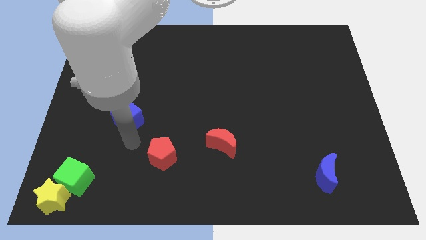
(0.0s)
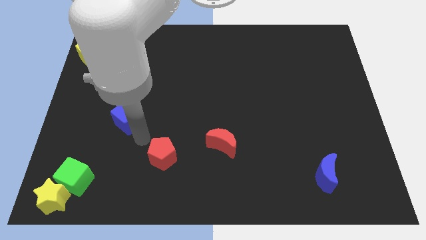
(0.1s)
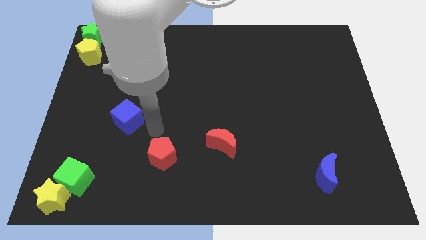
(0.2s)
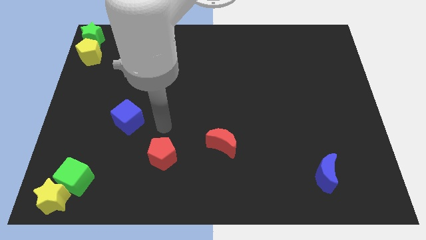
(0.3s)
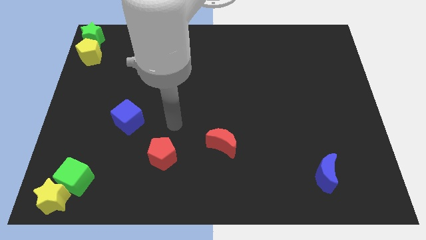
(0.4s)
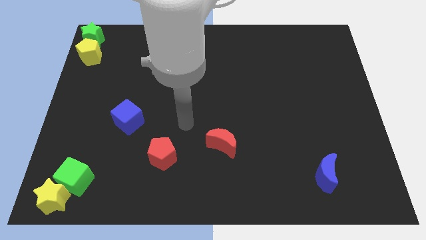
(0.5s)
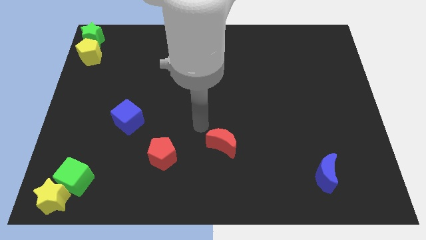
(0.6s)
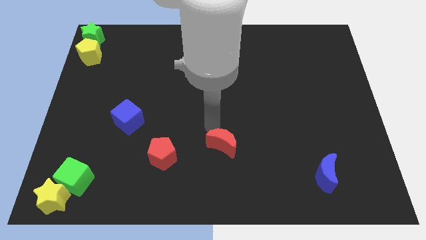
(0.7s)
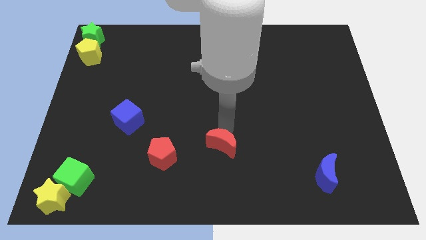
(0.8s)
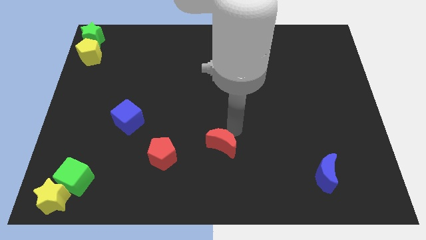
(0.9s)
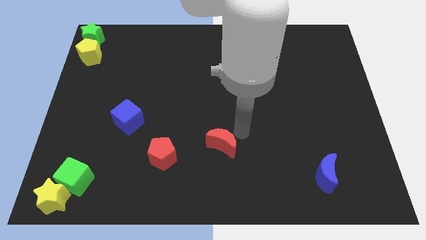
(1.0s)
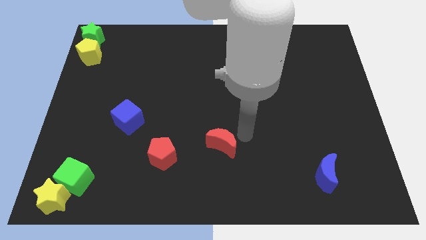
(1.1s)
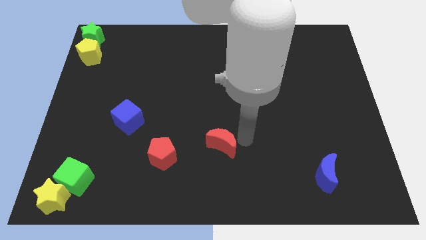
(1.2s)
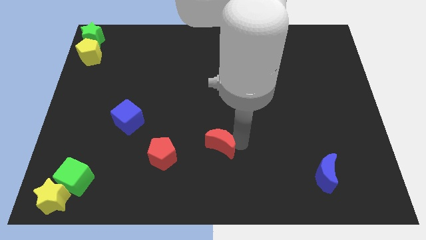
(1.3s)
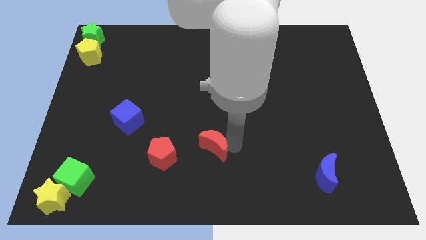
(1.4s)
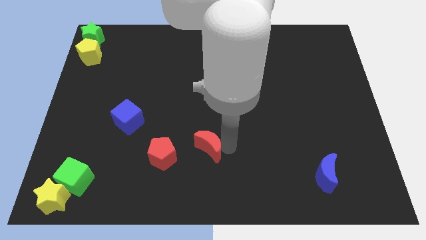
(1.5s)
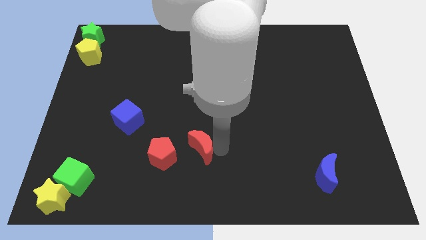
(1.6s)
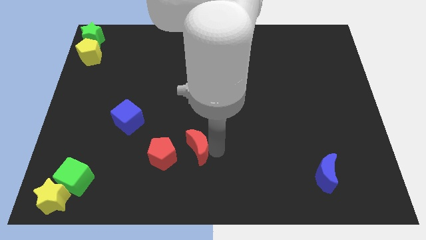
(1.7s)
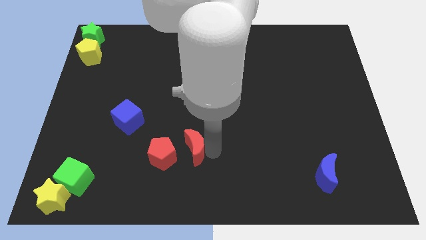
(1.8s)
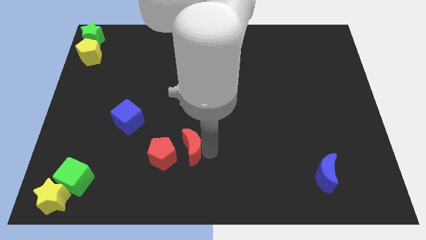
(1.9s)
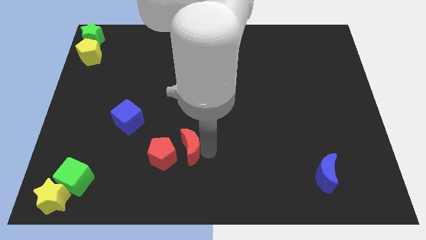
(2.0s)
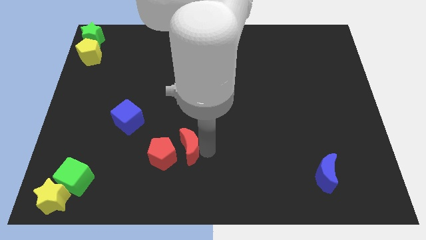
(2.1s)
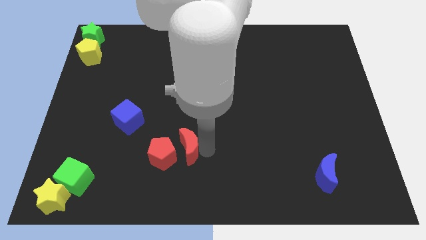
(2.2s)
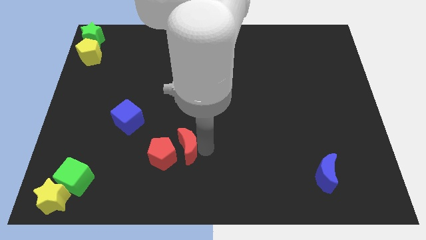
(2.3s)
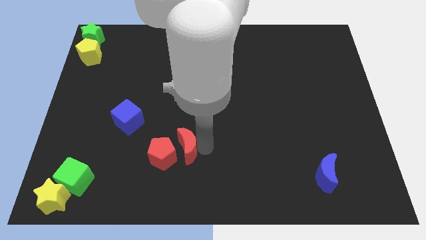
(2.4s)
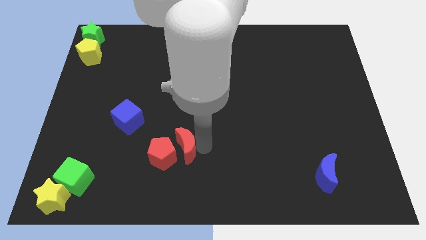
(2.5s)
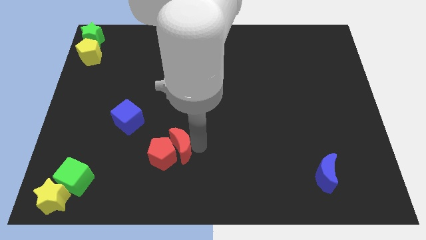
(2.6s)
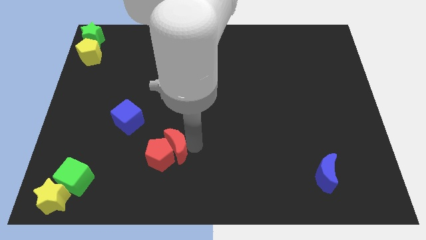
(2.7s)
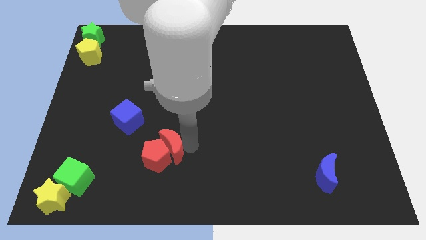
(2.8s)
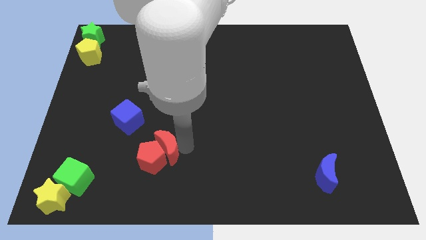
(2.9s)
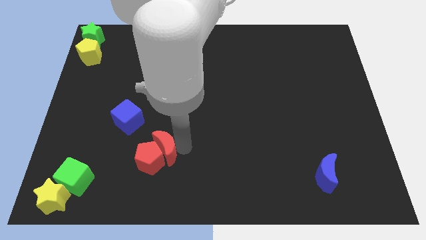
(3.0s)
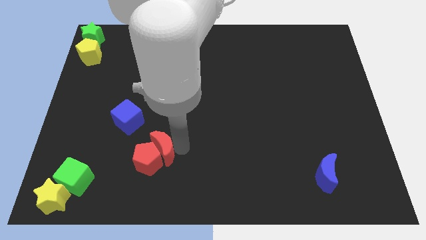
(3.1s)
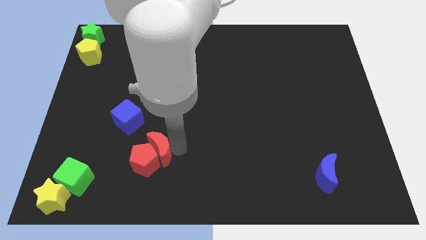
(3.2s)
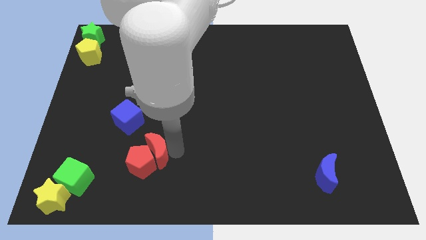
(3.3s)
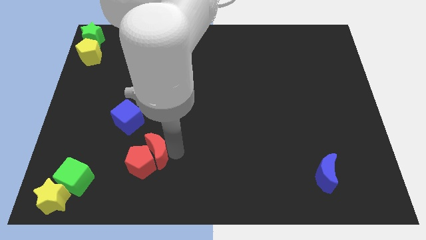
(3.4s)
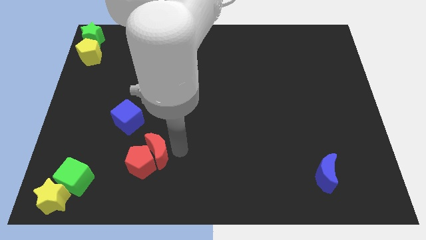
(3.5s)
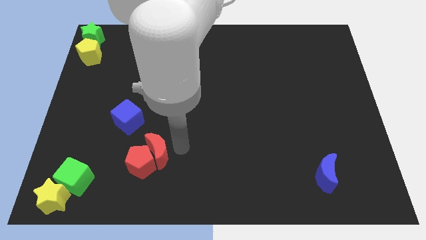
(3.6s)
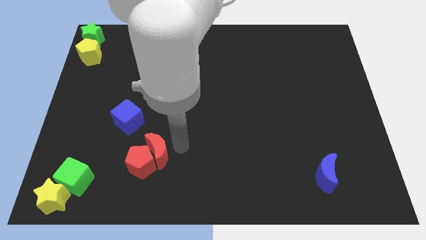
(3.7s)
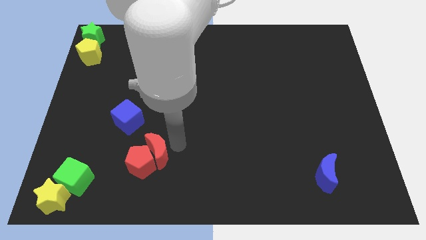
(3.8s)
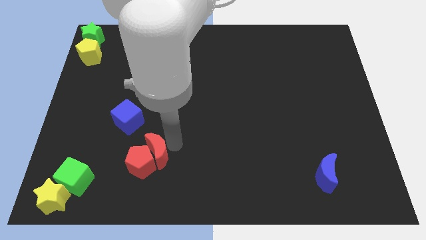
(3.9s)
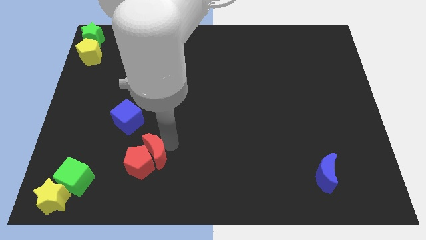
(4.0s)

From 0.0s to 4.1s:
slide red moon into red pentagon

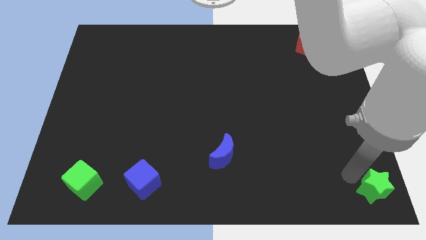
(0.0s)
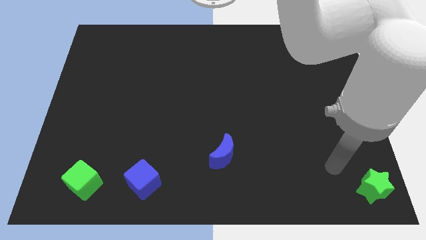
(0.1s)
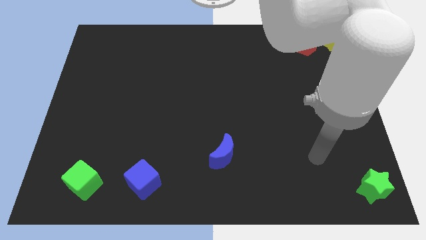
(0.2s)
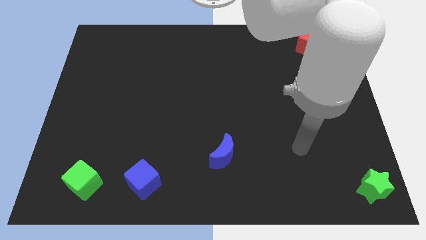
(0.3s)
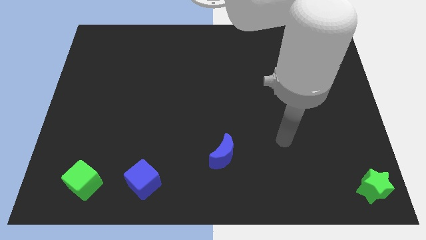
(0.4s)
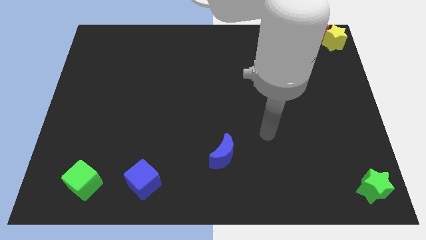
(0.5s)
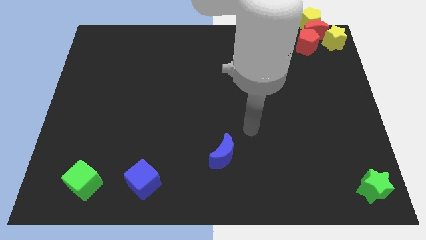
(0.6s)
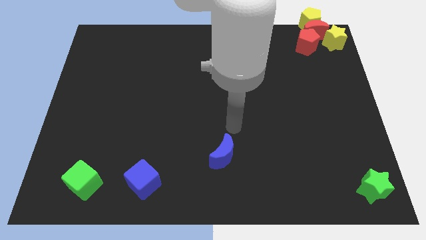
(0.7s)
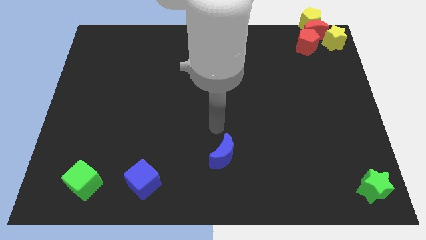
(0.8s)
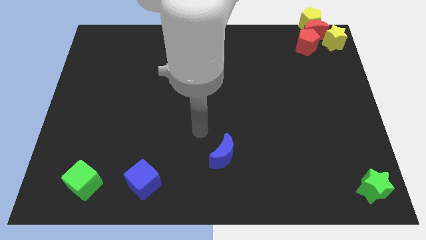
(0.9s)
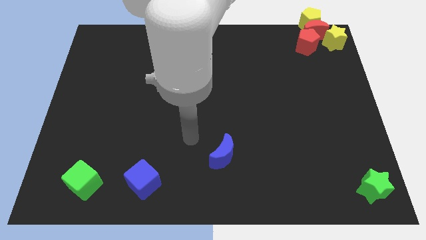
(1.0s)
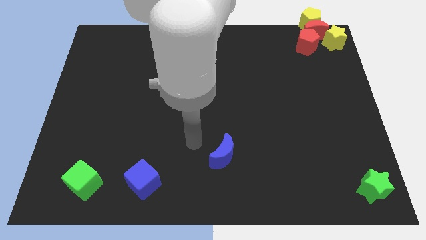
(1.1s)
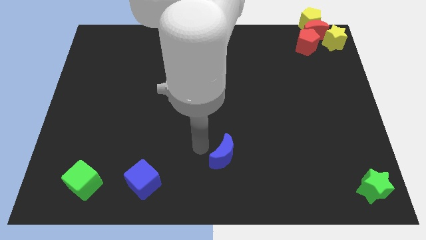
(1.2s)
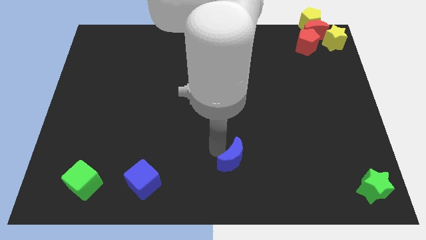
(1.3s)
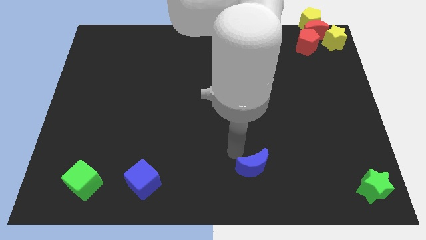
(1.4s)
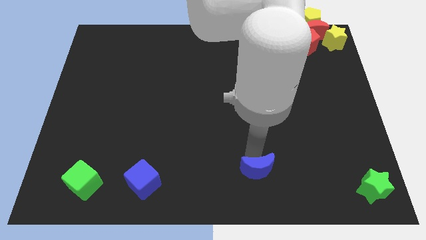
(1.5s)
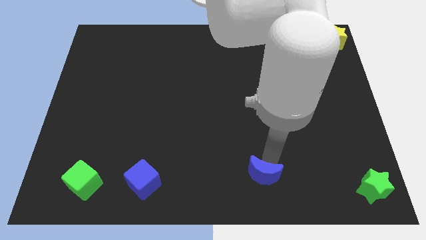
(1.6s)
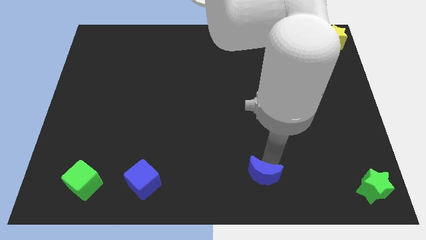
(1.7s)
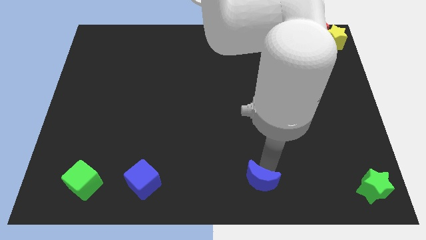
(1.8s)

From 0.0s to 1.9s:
move blue moon downwards

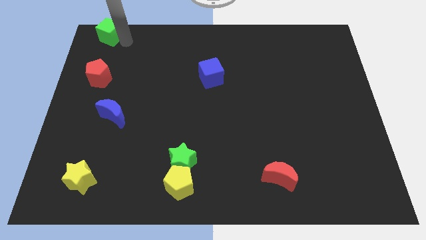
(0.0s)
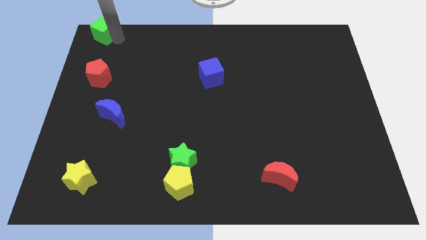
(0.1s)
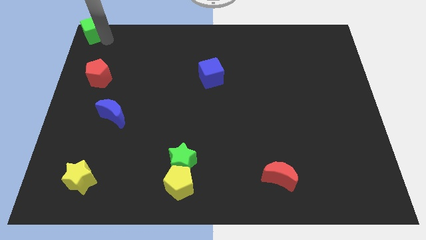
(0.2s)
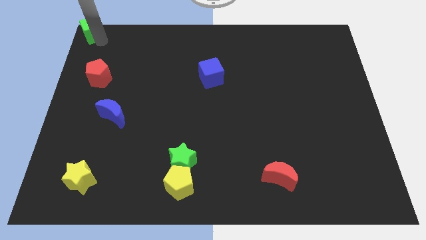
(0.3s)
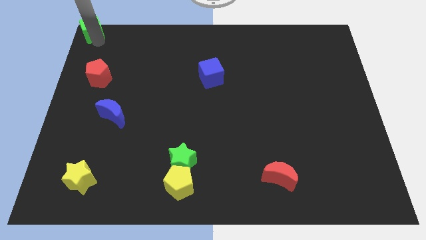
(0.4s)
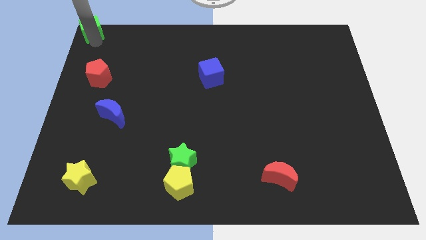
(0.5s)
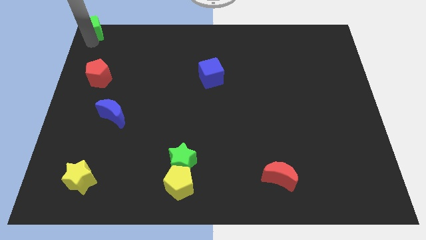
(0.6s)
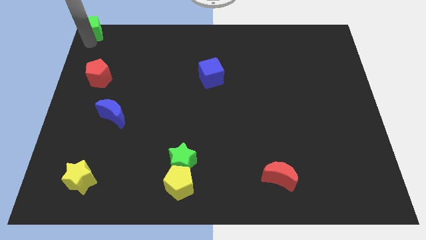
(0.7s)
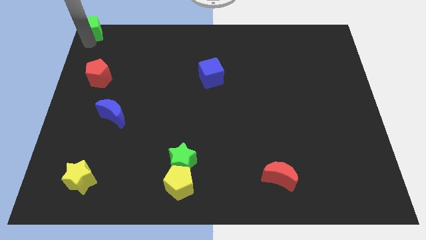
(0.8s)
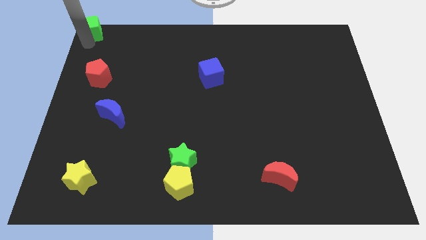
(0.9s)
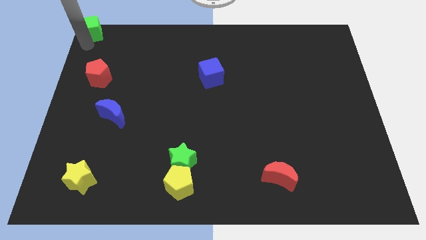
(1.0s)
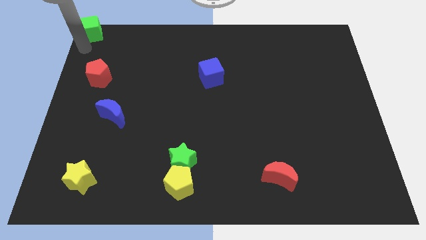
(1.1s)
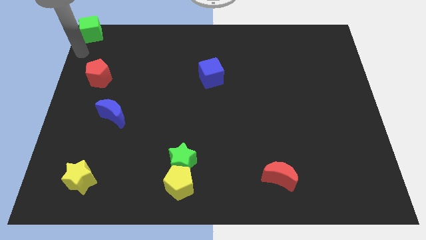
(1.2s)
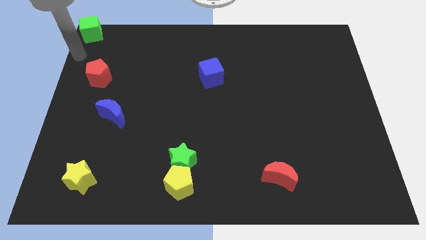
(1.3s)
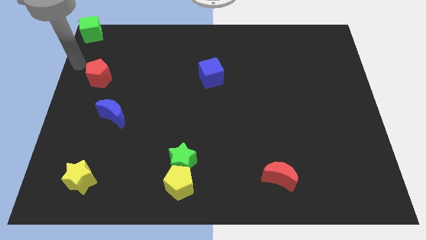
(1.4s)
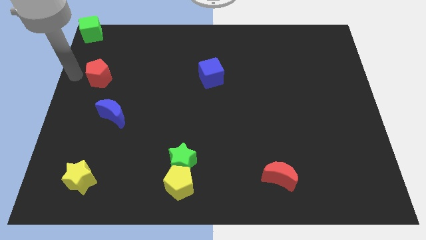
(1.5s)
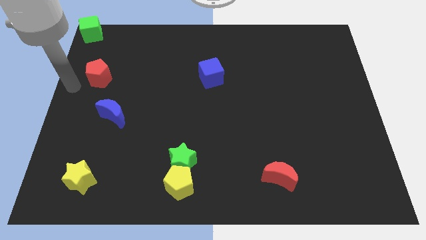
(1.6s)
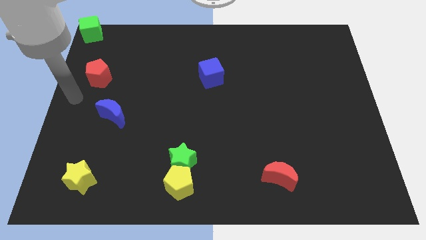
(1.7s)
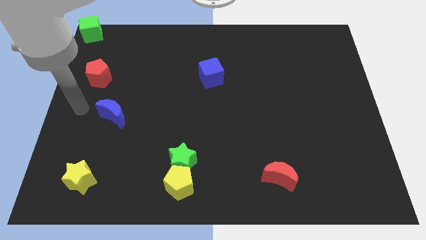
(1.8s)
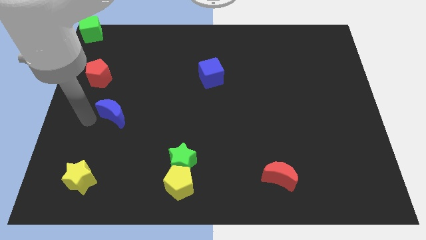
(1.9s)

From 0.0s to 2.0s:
push the green cube towards the top left corner of the board

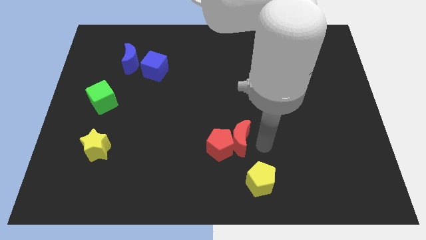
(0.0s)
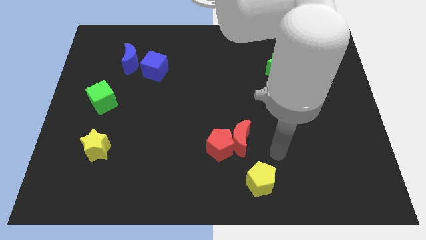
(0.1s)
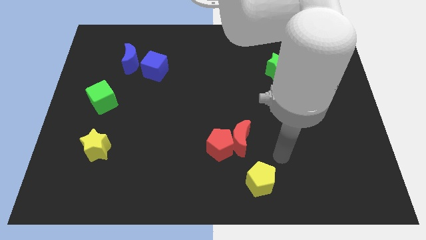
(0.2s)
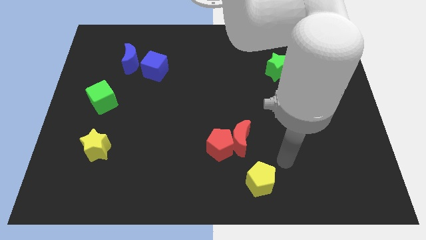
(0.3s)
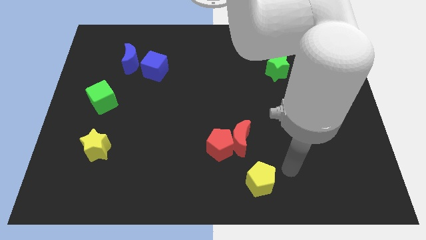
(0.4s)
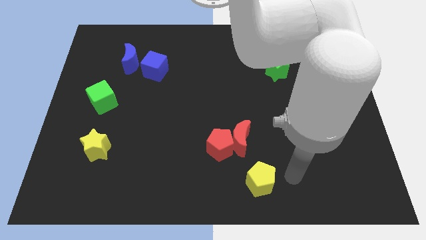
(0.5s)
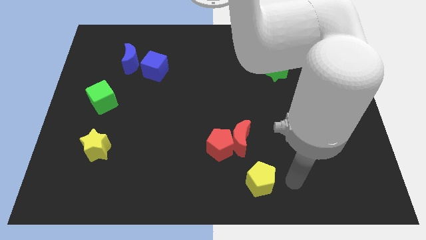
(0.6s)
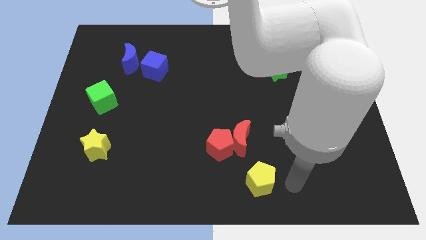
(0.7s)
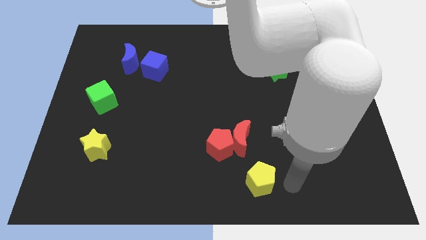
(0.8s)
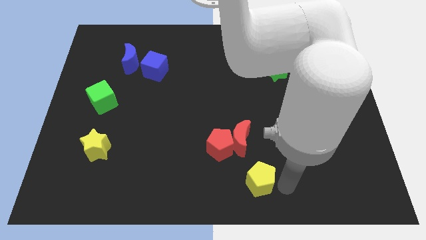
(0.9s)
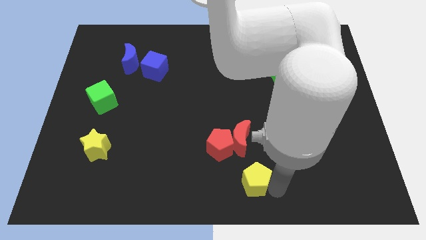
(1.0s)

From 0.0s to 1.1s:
move your arm to the right of the yellow pentagon
